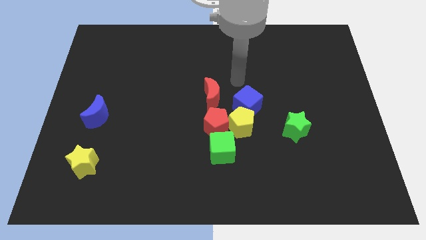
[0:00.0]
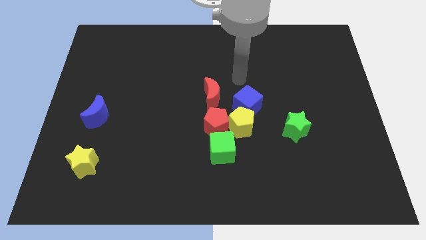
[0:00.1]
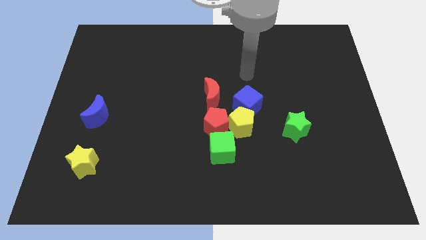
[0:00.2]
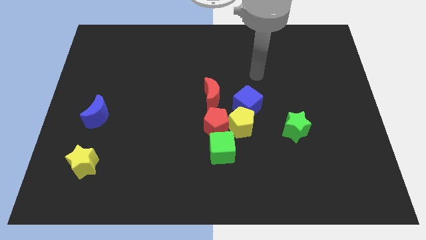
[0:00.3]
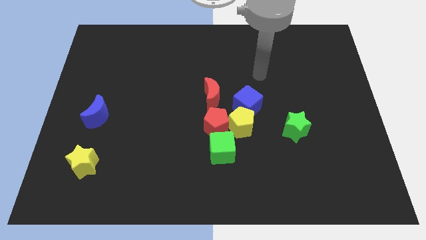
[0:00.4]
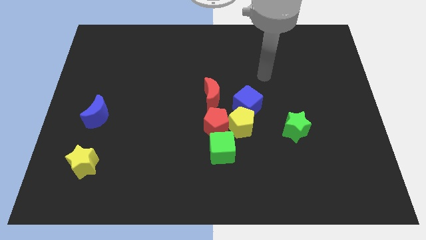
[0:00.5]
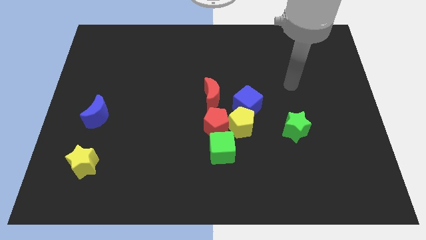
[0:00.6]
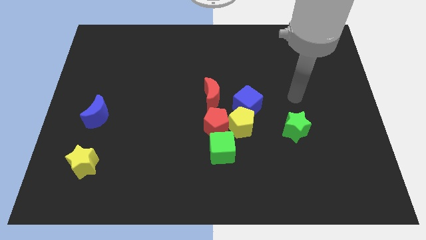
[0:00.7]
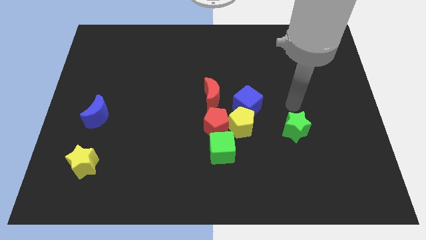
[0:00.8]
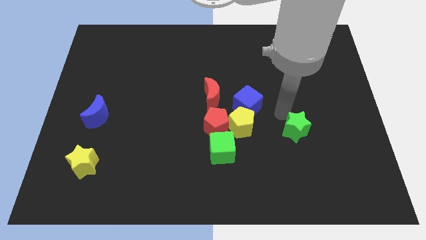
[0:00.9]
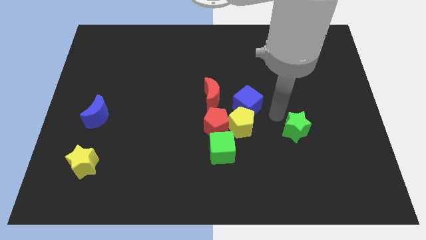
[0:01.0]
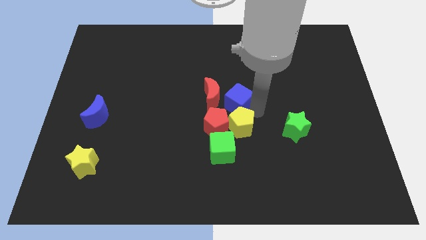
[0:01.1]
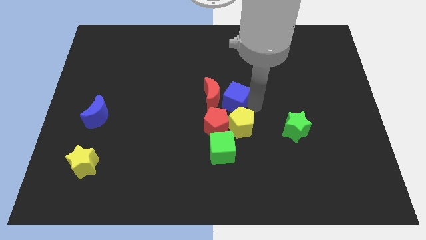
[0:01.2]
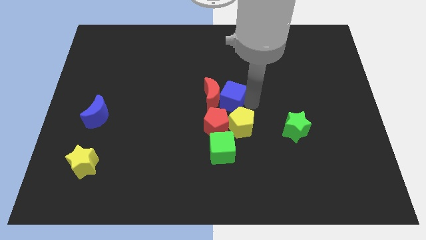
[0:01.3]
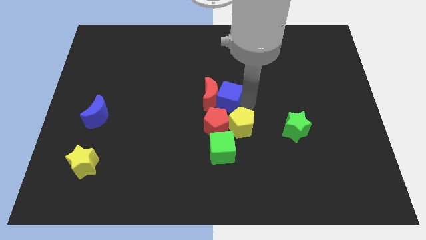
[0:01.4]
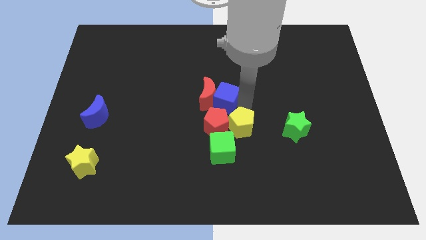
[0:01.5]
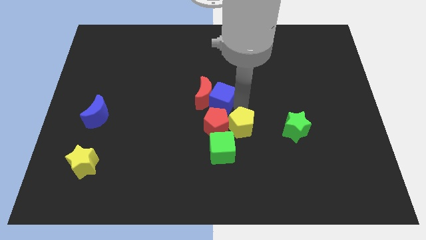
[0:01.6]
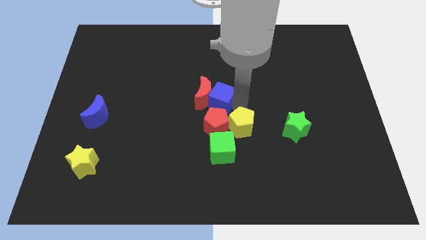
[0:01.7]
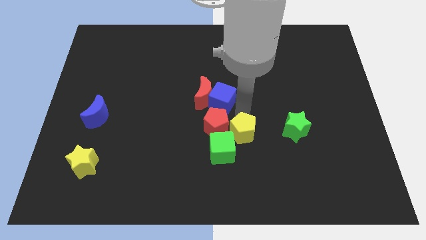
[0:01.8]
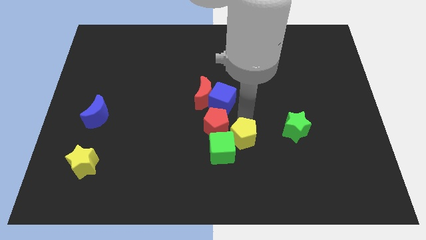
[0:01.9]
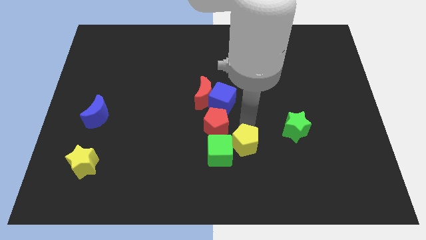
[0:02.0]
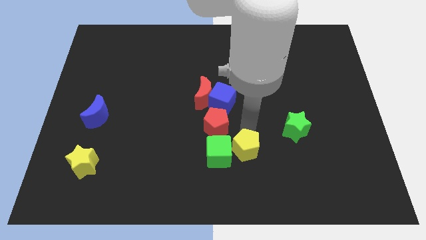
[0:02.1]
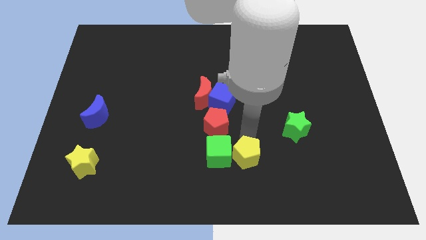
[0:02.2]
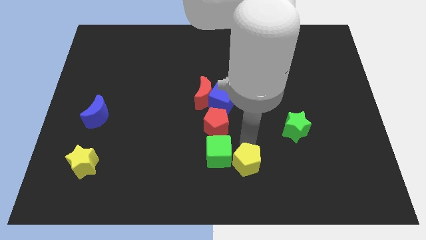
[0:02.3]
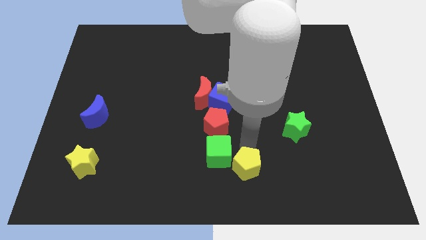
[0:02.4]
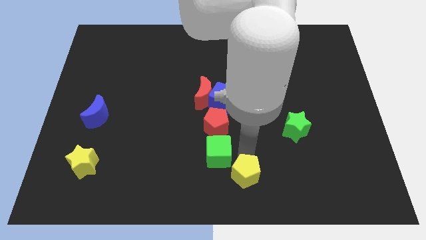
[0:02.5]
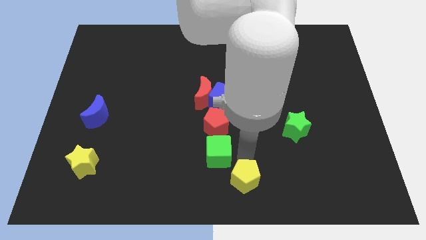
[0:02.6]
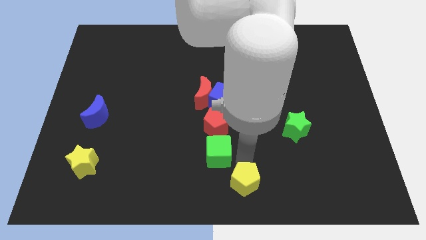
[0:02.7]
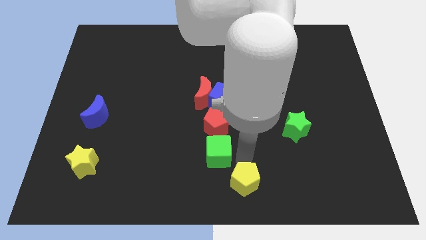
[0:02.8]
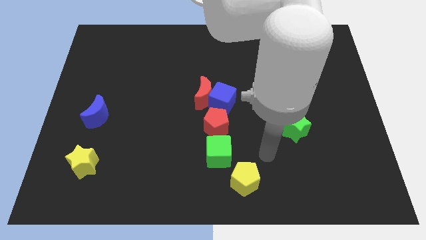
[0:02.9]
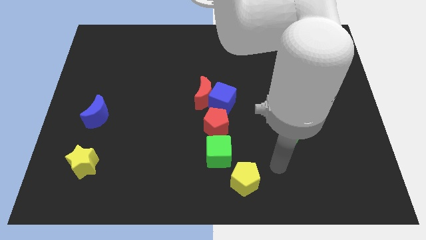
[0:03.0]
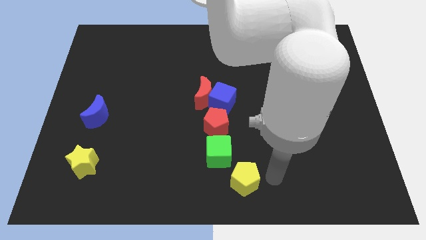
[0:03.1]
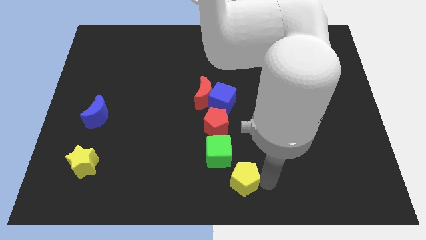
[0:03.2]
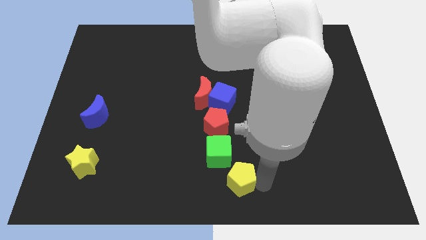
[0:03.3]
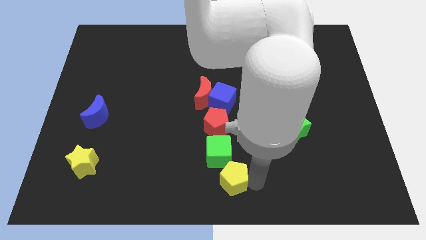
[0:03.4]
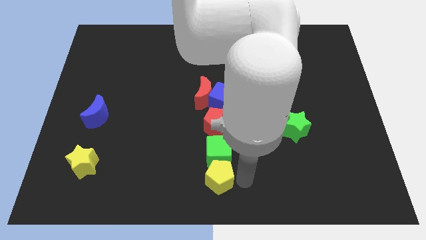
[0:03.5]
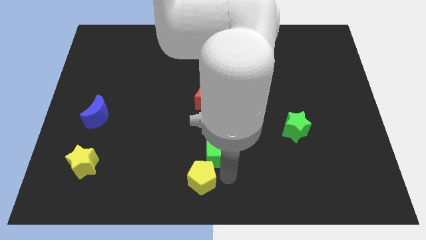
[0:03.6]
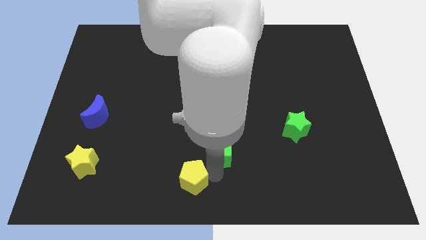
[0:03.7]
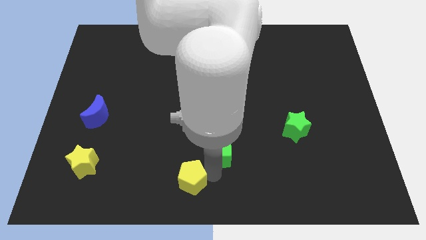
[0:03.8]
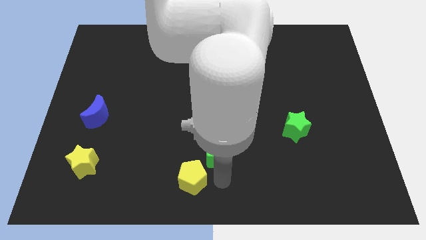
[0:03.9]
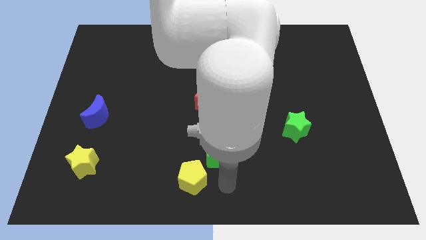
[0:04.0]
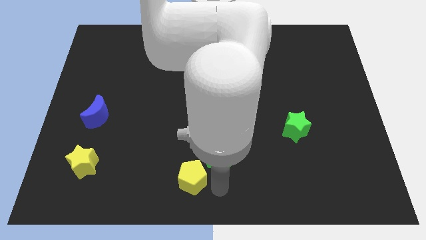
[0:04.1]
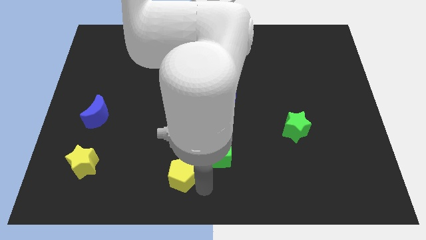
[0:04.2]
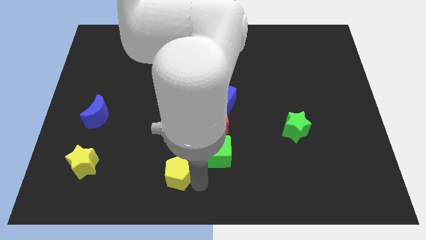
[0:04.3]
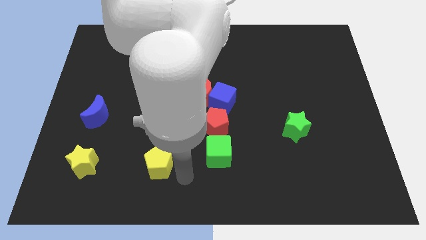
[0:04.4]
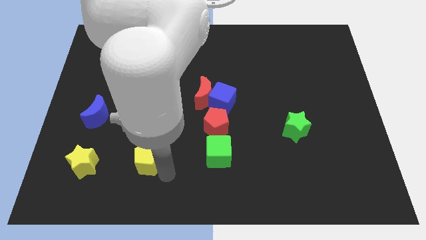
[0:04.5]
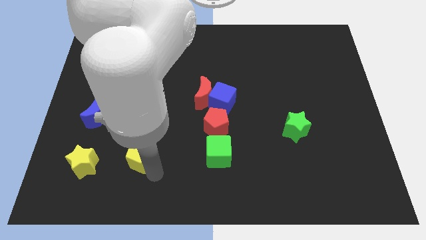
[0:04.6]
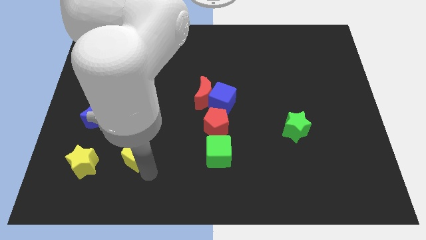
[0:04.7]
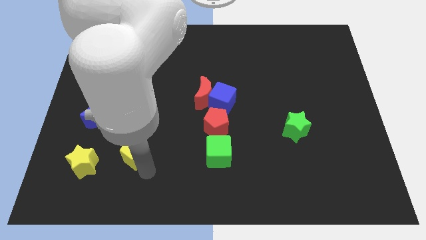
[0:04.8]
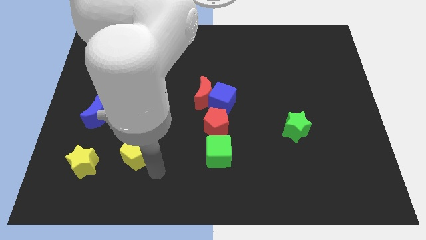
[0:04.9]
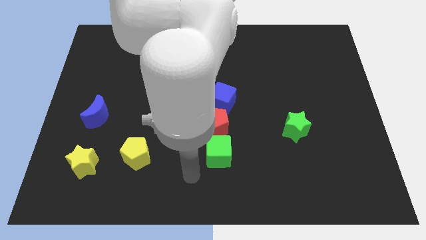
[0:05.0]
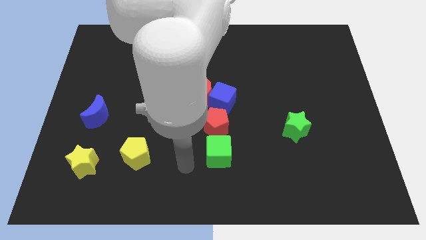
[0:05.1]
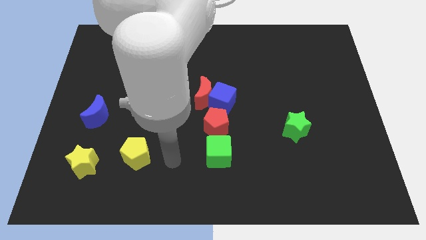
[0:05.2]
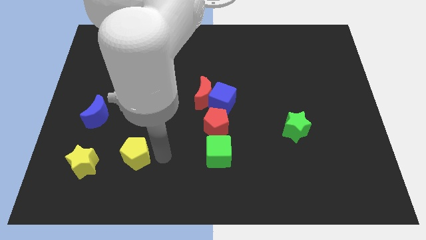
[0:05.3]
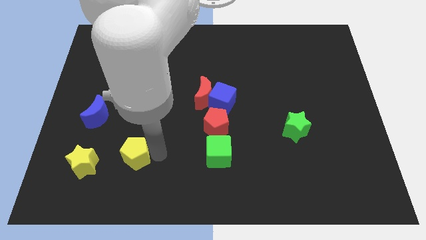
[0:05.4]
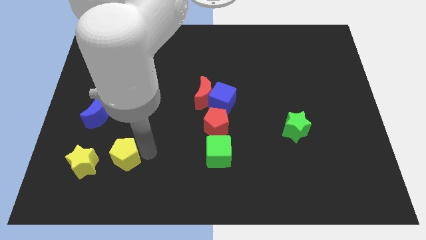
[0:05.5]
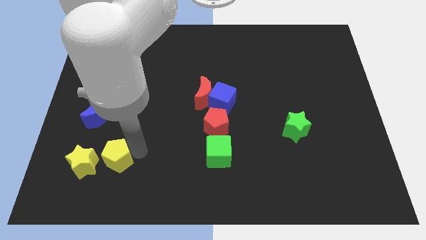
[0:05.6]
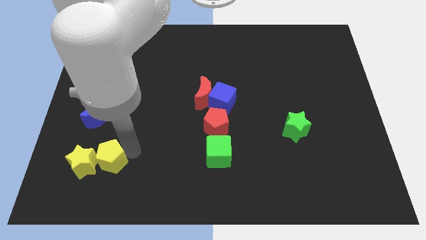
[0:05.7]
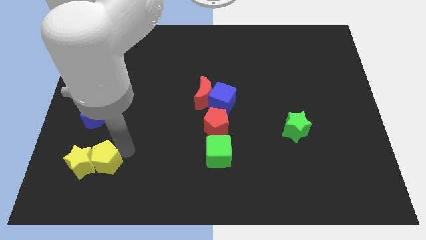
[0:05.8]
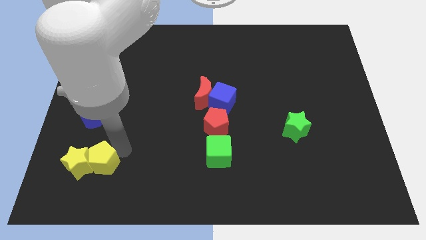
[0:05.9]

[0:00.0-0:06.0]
slide the yellow pentagon towards the yellow star

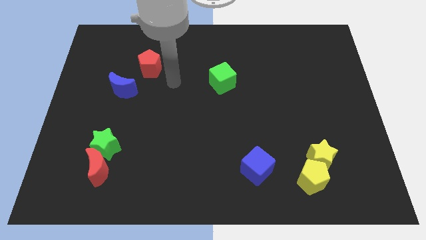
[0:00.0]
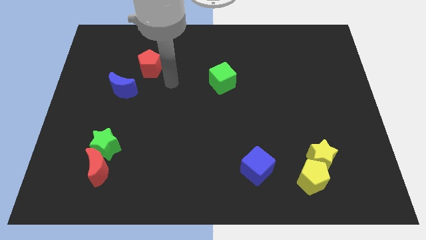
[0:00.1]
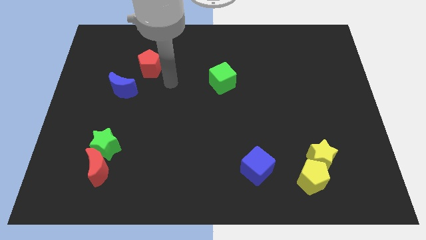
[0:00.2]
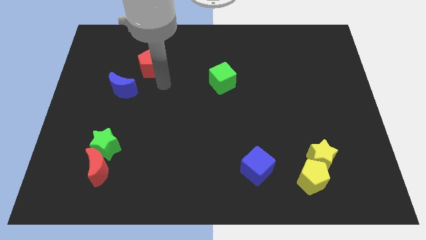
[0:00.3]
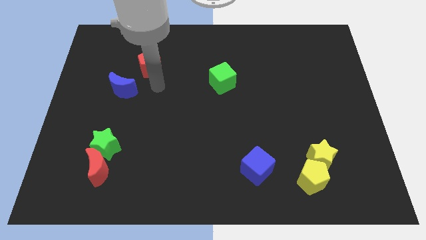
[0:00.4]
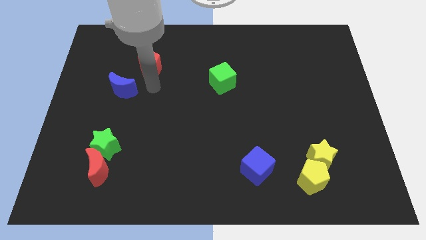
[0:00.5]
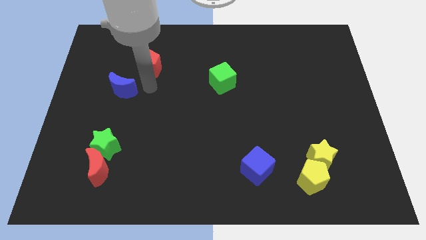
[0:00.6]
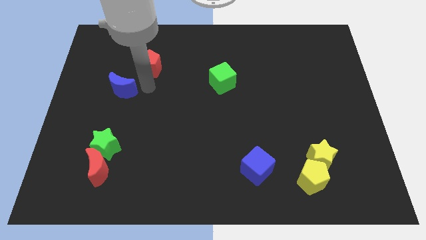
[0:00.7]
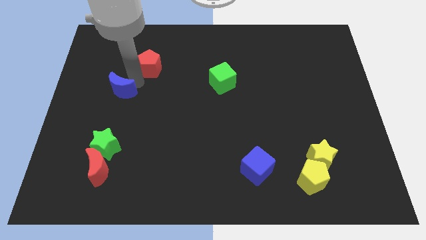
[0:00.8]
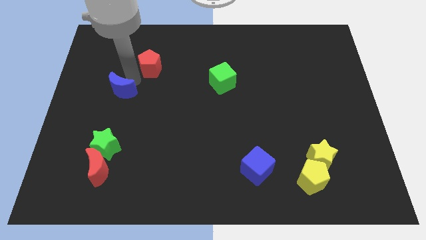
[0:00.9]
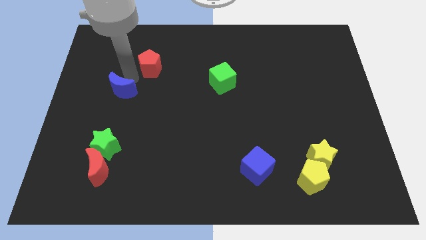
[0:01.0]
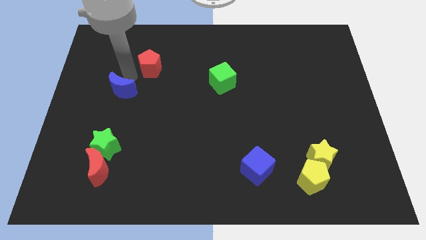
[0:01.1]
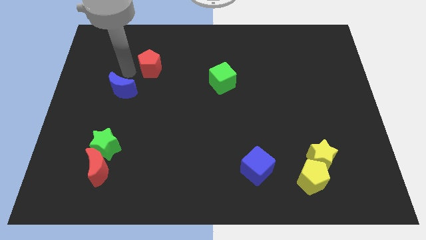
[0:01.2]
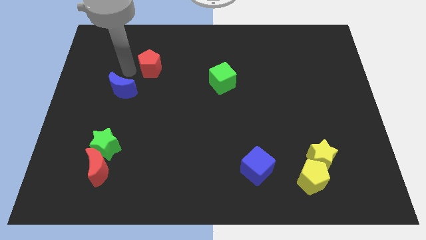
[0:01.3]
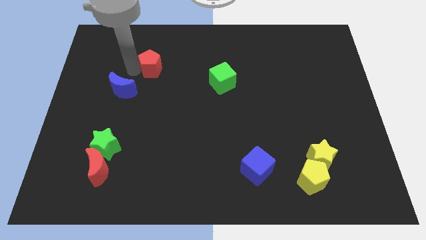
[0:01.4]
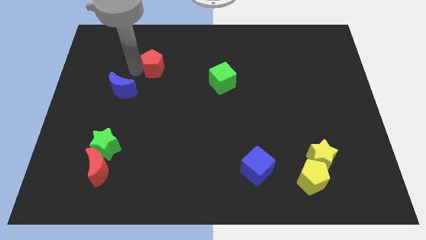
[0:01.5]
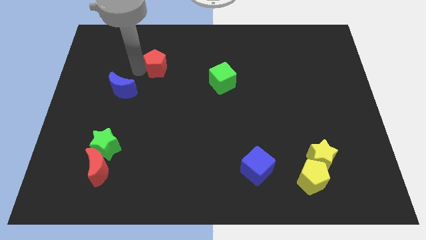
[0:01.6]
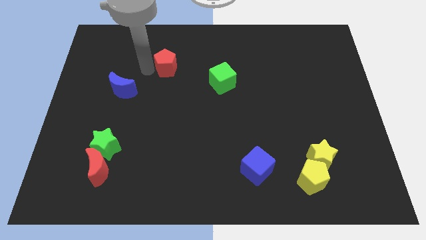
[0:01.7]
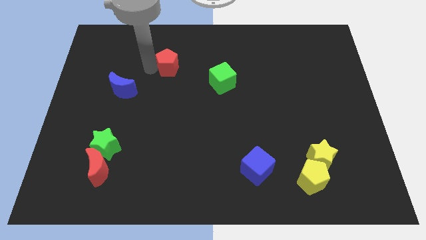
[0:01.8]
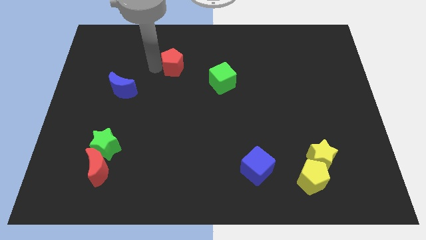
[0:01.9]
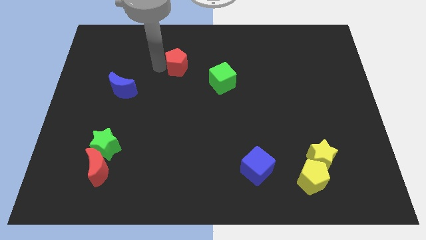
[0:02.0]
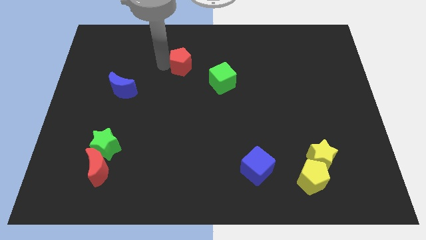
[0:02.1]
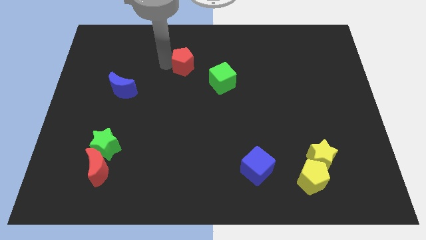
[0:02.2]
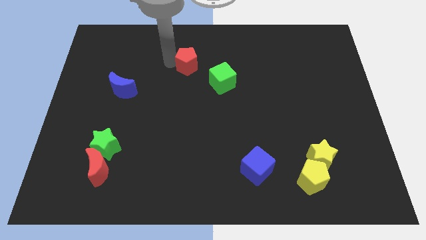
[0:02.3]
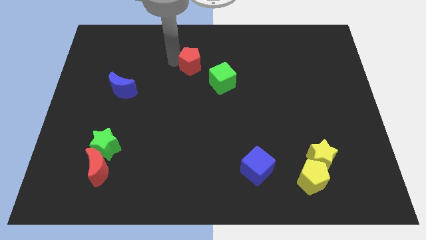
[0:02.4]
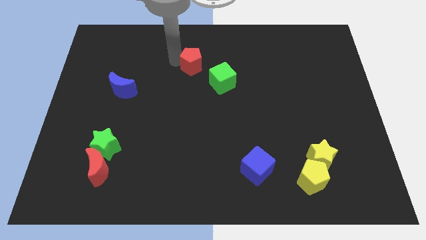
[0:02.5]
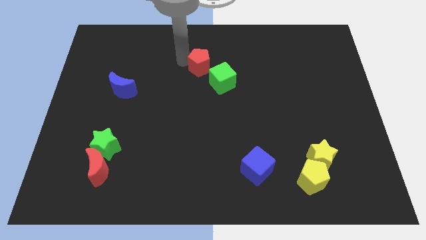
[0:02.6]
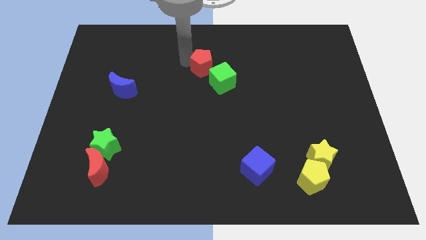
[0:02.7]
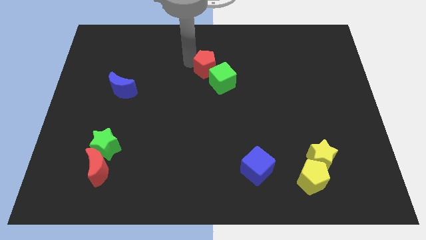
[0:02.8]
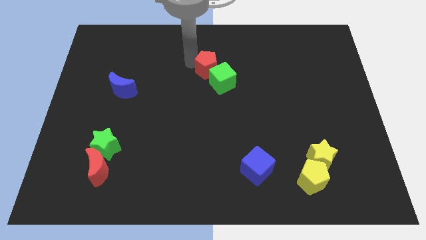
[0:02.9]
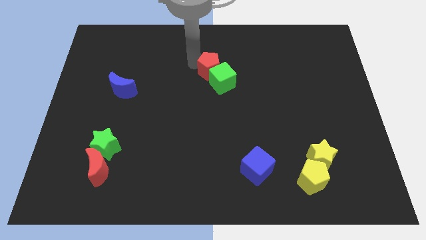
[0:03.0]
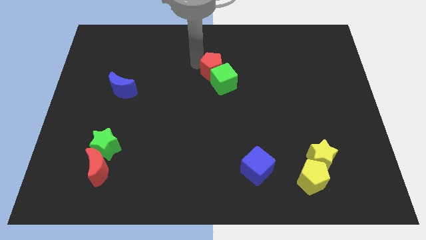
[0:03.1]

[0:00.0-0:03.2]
move the red pentagon next to the green cube
